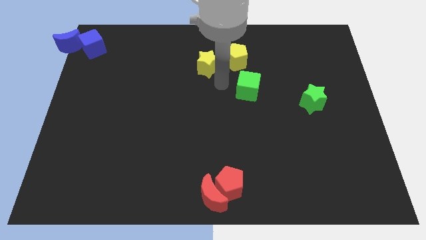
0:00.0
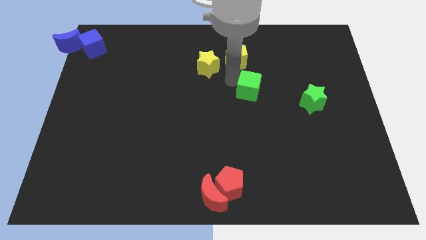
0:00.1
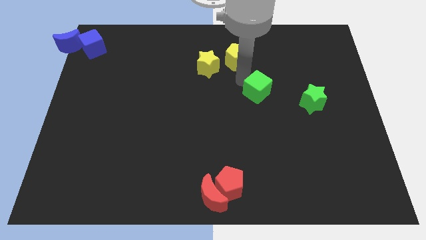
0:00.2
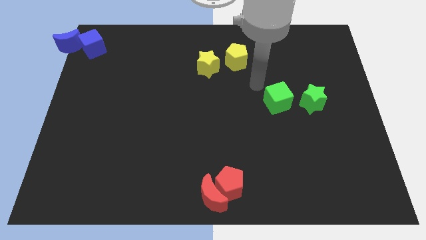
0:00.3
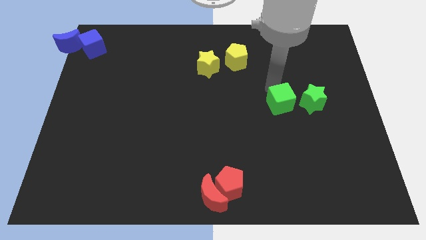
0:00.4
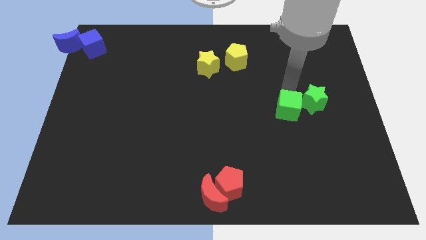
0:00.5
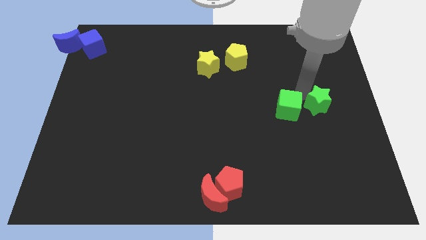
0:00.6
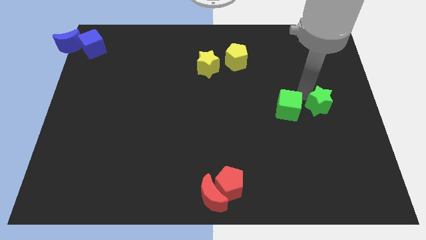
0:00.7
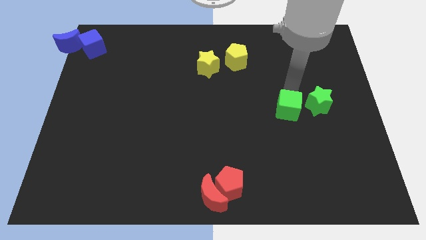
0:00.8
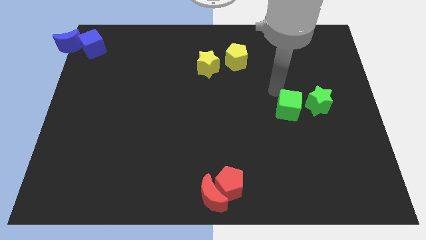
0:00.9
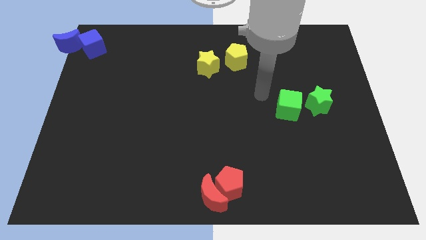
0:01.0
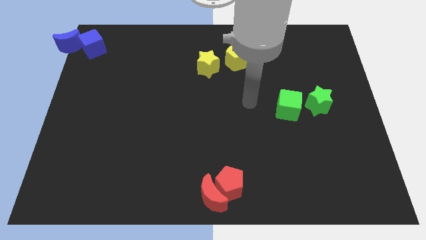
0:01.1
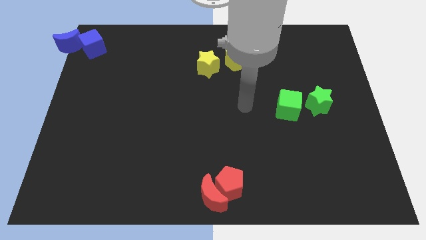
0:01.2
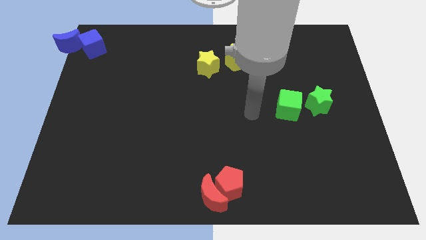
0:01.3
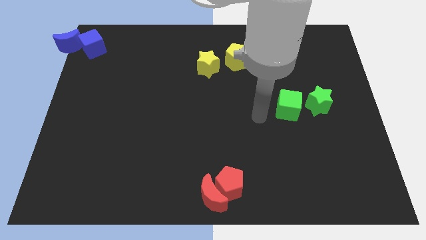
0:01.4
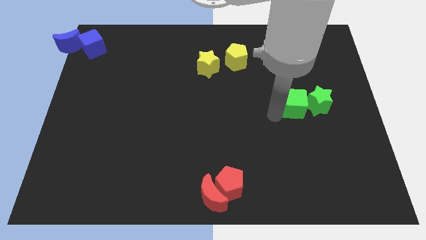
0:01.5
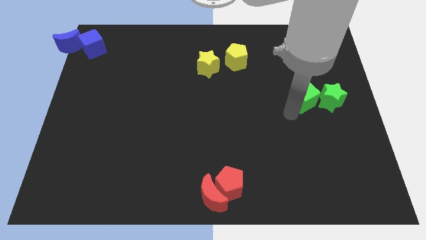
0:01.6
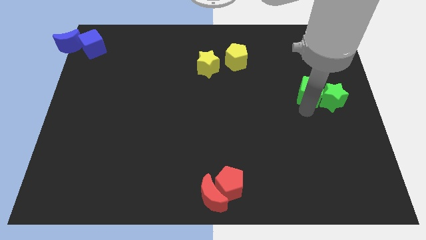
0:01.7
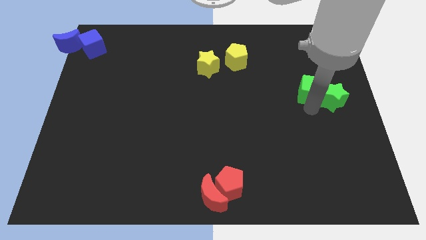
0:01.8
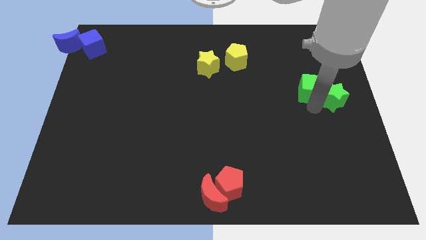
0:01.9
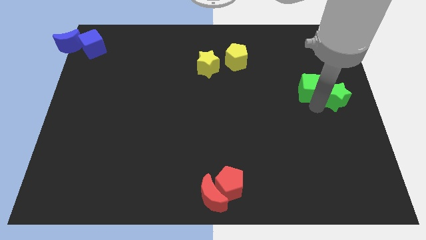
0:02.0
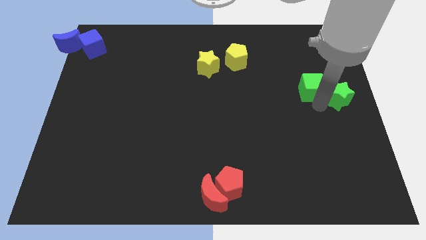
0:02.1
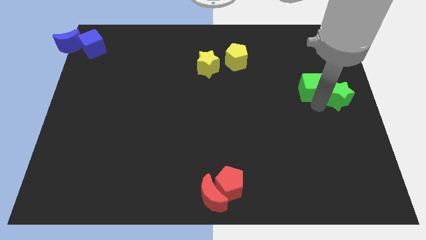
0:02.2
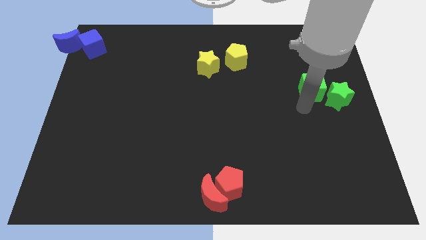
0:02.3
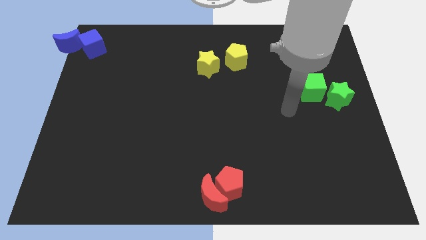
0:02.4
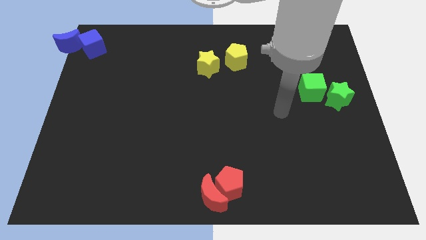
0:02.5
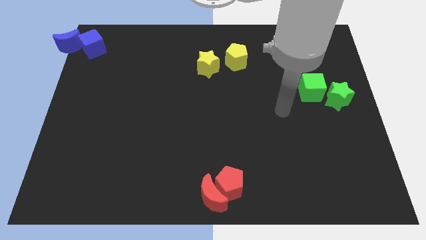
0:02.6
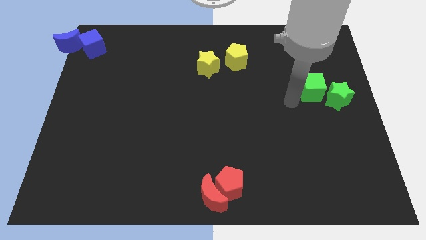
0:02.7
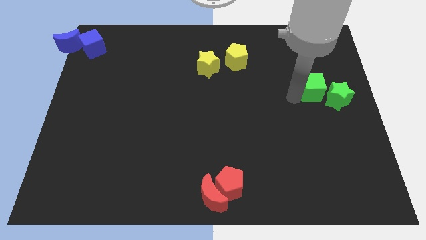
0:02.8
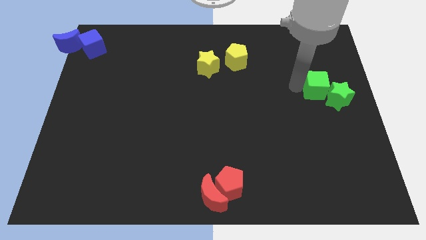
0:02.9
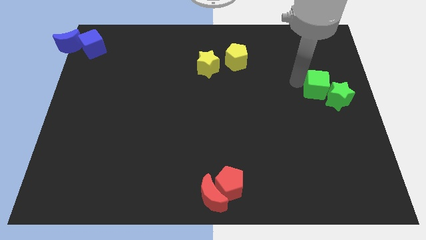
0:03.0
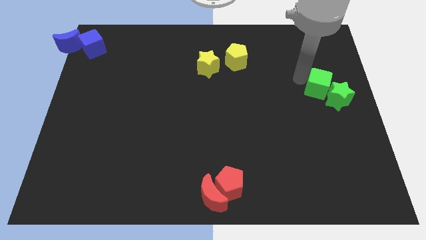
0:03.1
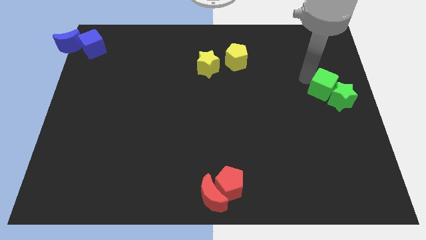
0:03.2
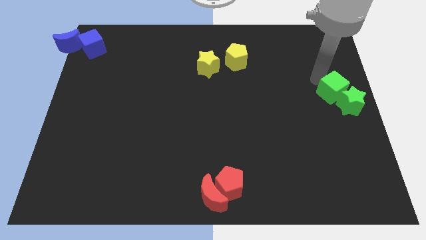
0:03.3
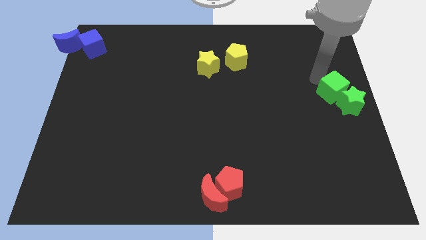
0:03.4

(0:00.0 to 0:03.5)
move the group of green blocks to the center right

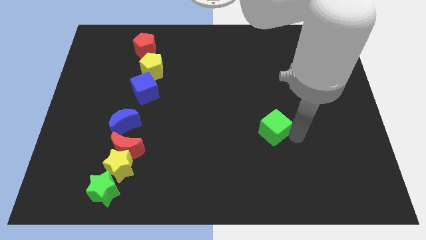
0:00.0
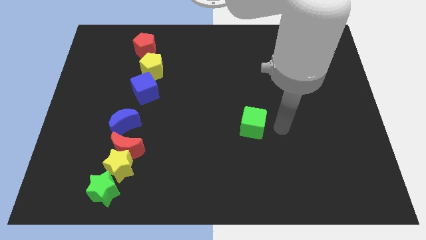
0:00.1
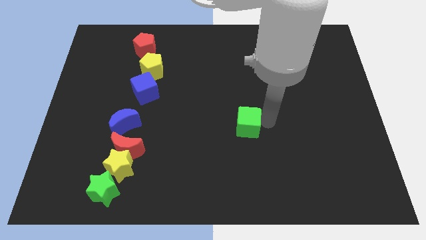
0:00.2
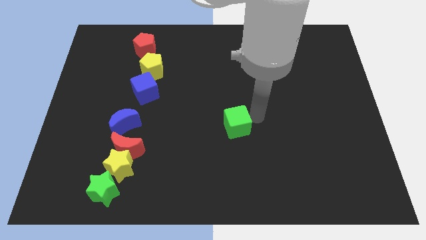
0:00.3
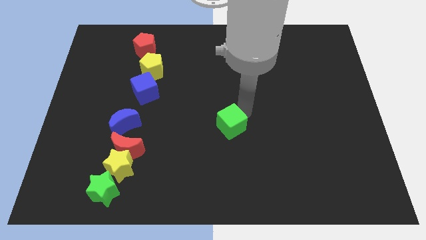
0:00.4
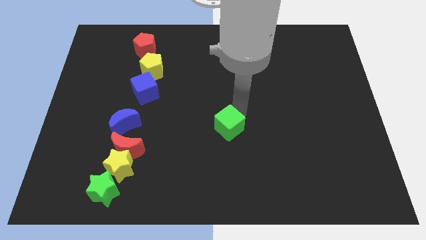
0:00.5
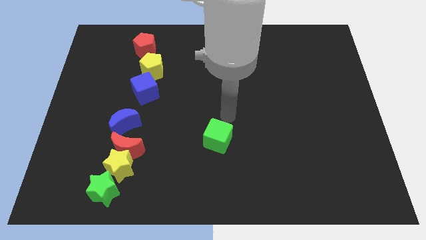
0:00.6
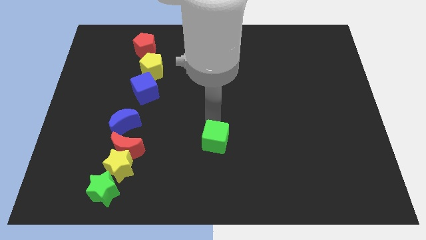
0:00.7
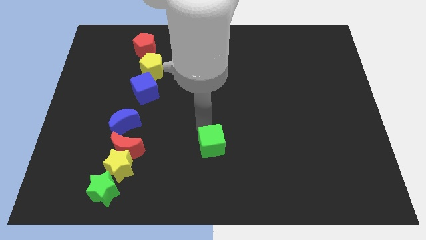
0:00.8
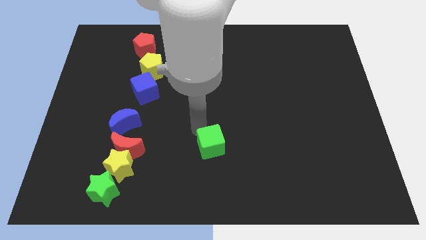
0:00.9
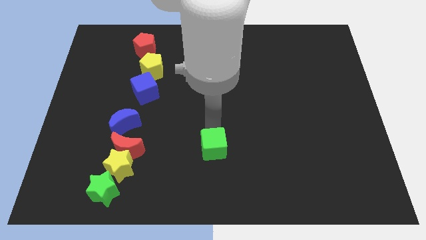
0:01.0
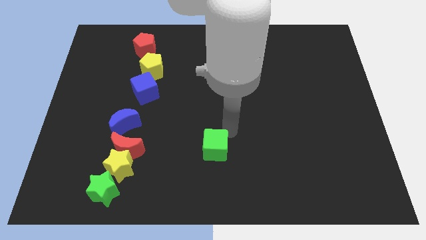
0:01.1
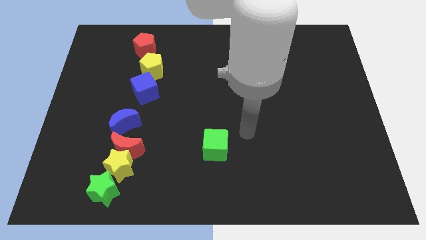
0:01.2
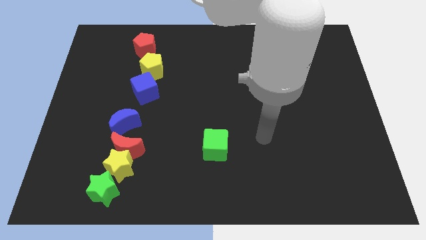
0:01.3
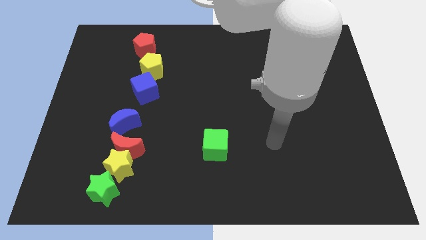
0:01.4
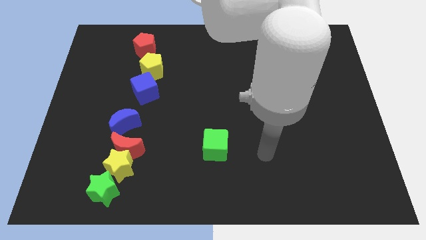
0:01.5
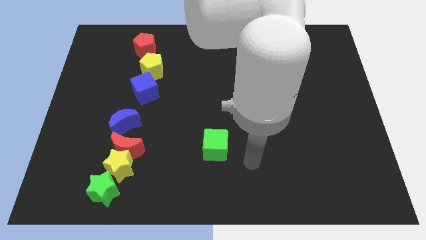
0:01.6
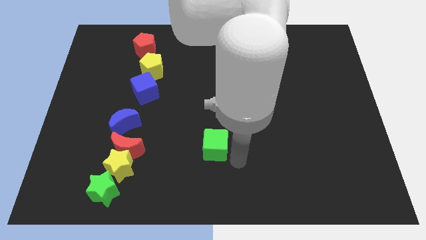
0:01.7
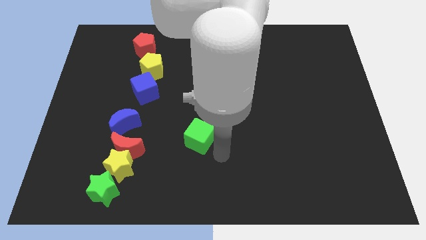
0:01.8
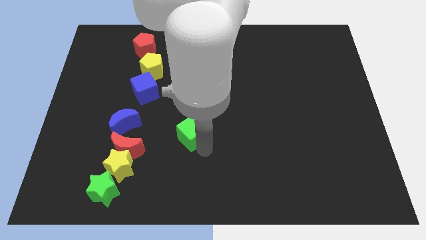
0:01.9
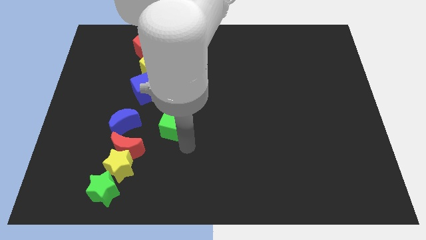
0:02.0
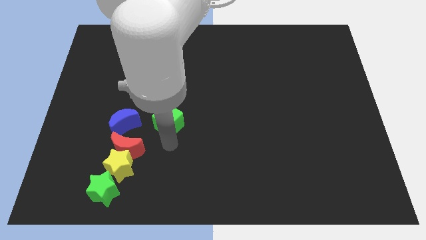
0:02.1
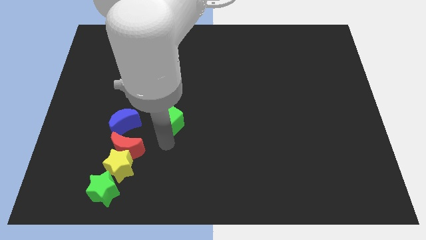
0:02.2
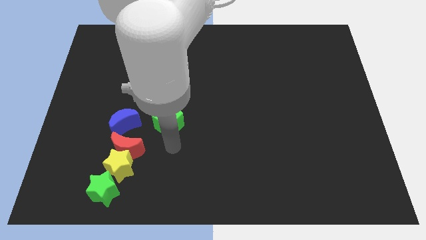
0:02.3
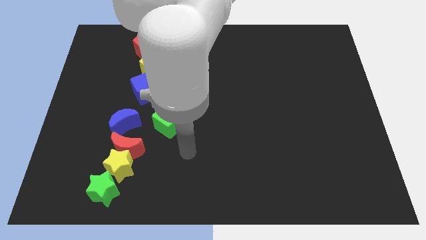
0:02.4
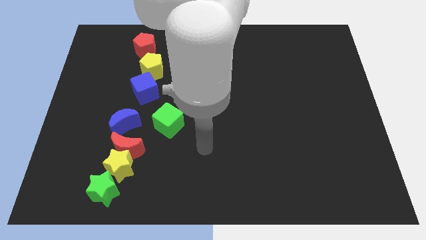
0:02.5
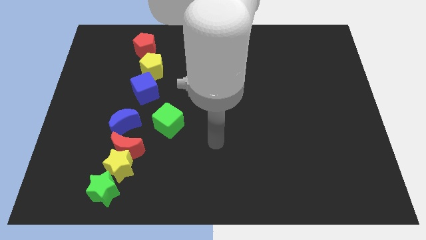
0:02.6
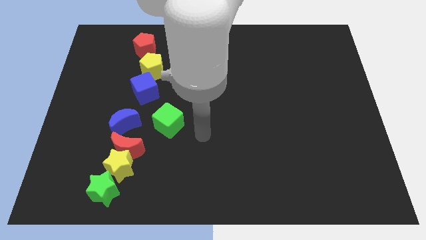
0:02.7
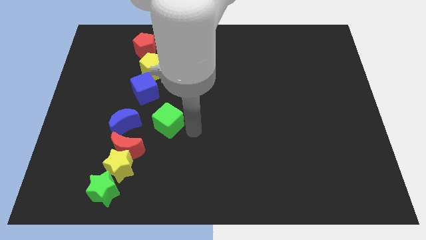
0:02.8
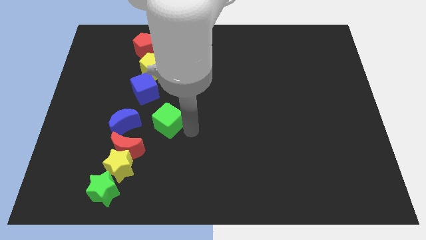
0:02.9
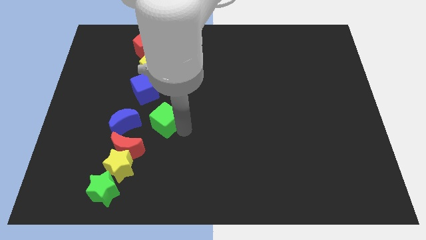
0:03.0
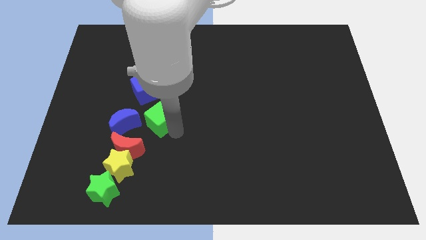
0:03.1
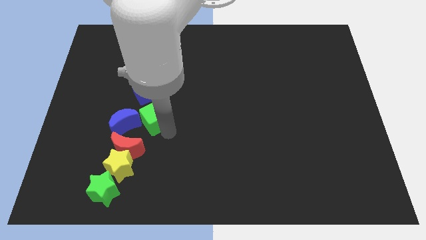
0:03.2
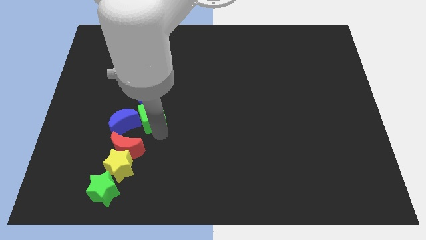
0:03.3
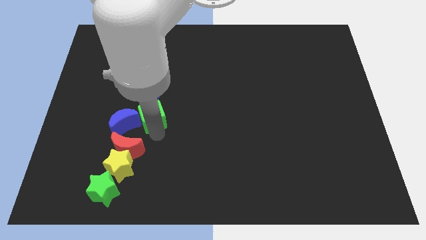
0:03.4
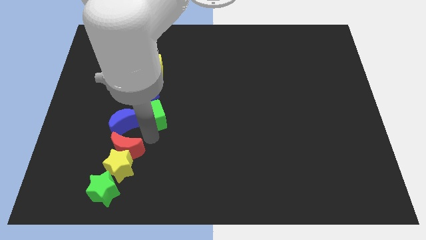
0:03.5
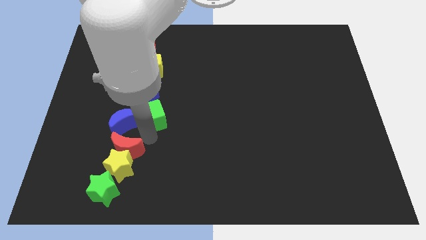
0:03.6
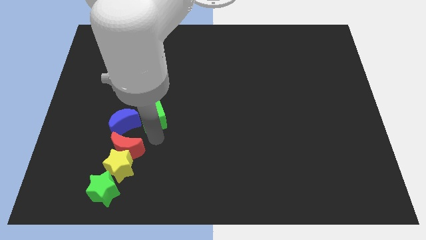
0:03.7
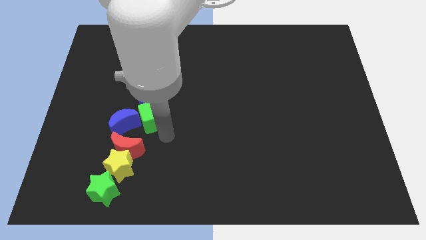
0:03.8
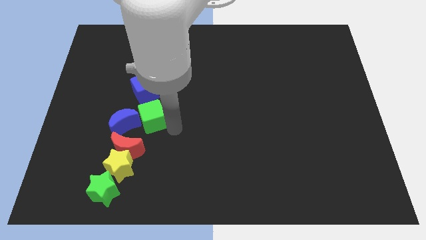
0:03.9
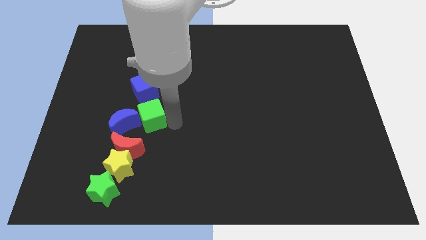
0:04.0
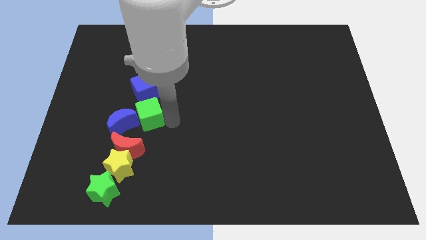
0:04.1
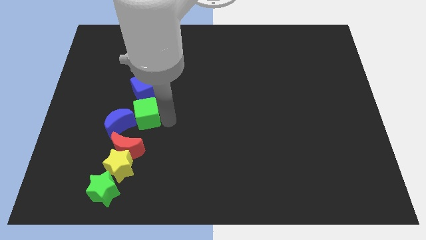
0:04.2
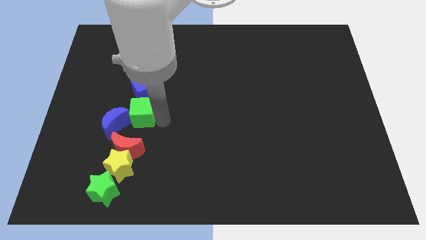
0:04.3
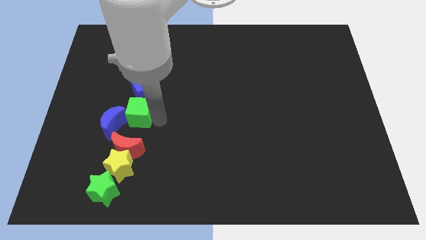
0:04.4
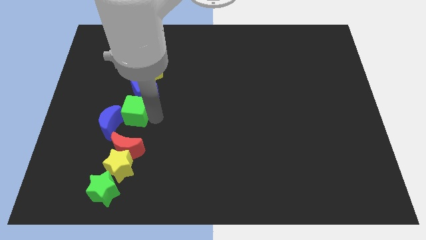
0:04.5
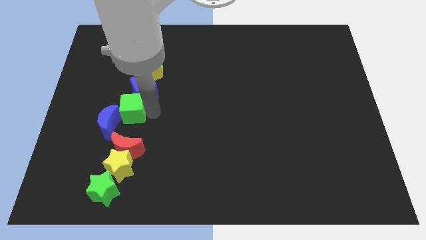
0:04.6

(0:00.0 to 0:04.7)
push the green cube into the blue moon

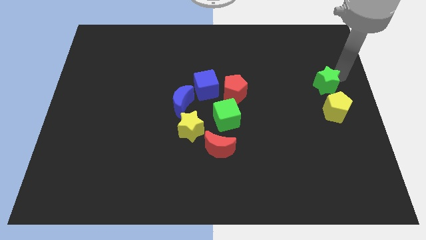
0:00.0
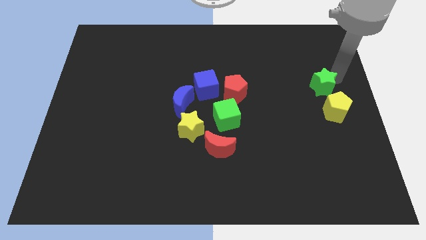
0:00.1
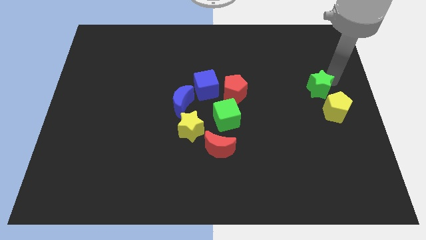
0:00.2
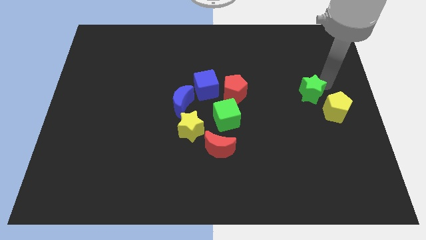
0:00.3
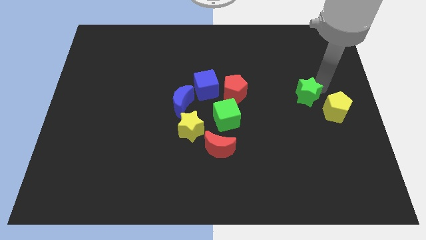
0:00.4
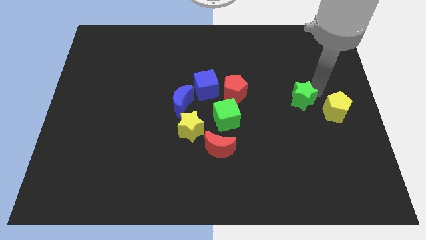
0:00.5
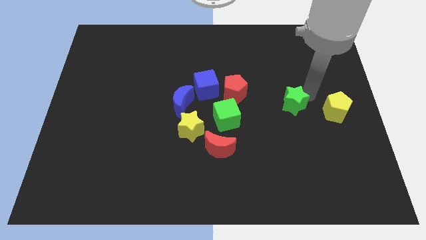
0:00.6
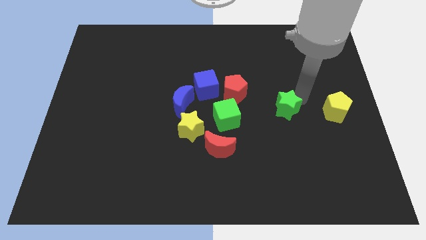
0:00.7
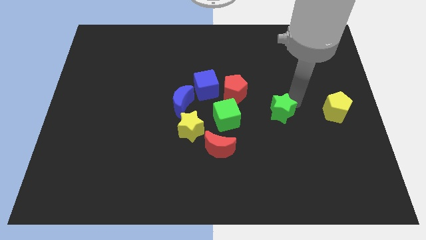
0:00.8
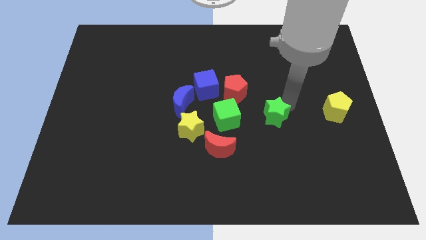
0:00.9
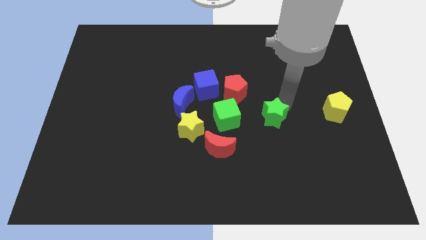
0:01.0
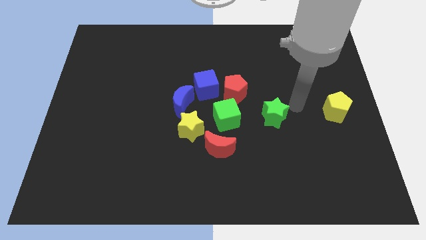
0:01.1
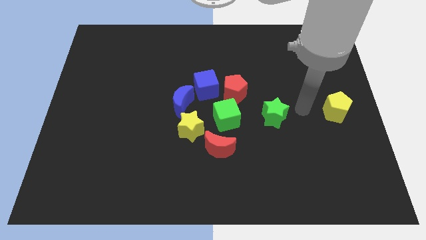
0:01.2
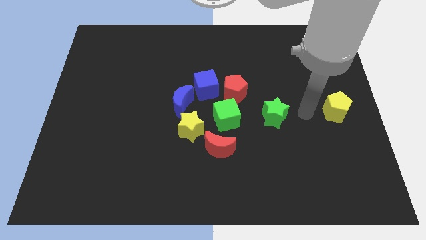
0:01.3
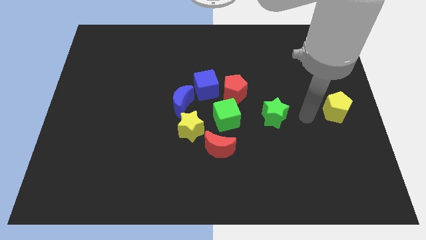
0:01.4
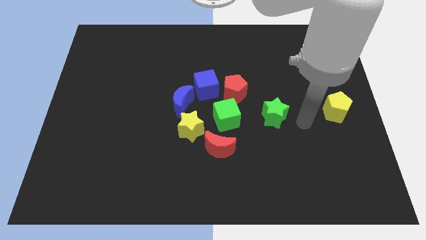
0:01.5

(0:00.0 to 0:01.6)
place the green star to the right of the green cube
